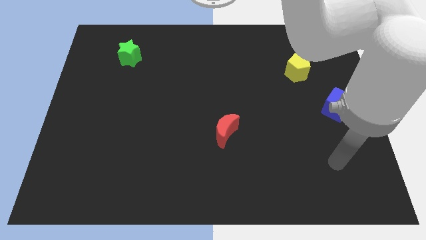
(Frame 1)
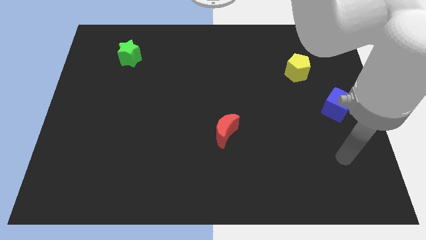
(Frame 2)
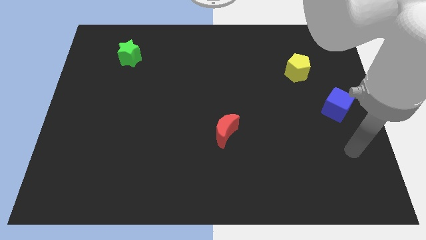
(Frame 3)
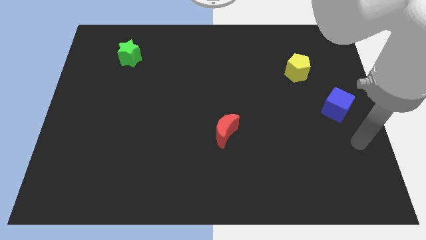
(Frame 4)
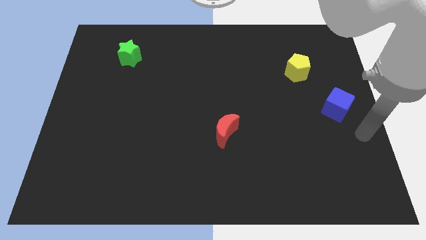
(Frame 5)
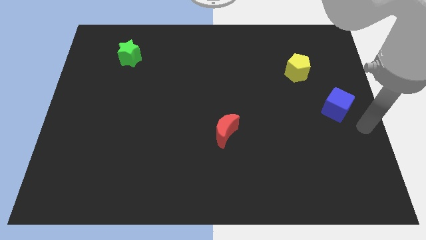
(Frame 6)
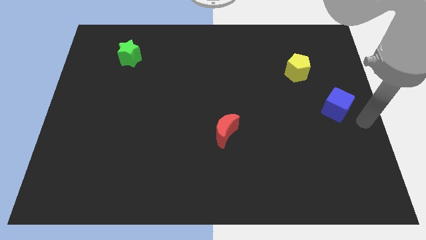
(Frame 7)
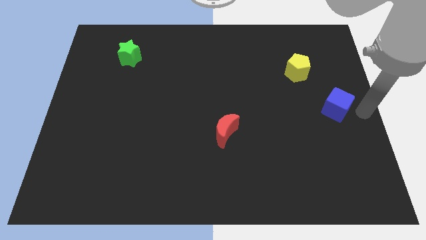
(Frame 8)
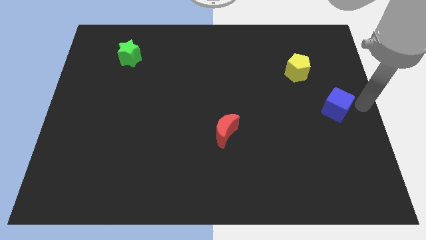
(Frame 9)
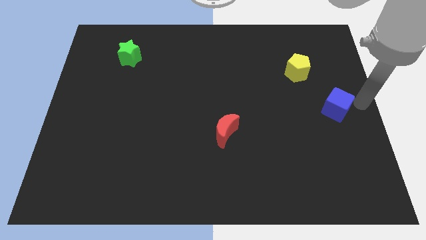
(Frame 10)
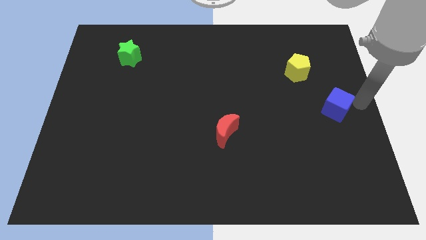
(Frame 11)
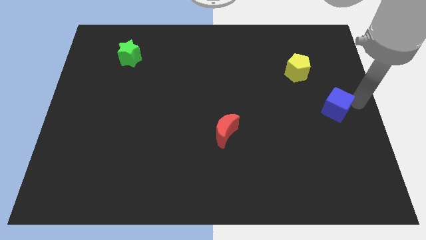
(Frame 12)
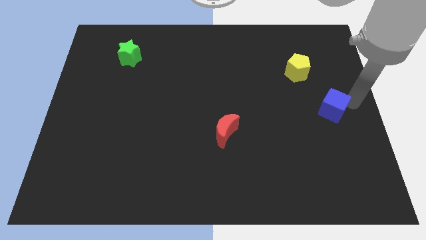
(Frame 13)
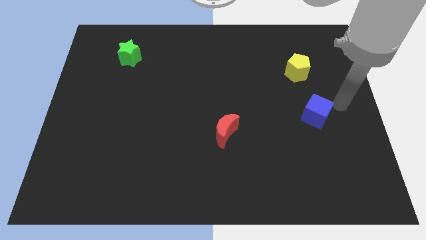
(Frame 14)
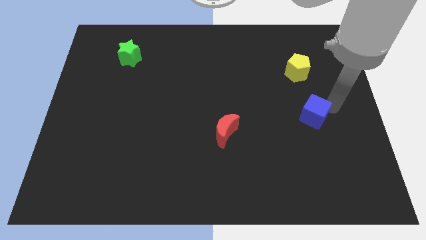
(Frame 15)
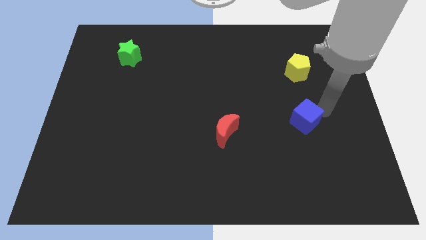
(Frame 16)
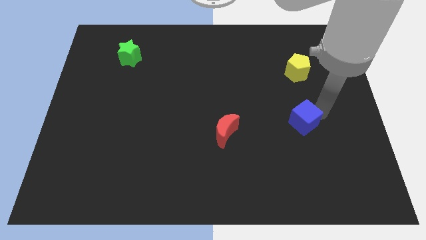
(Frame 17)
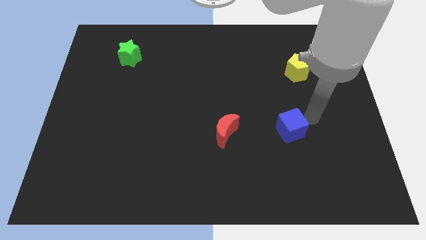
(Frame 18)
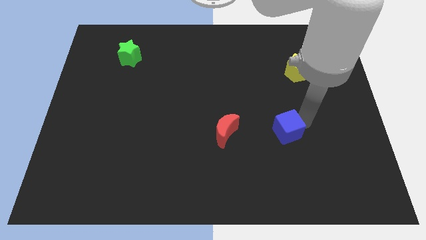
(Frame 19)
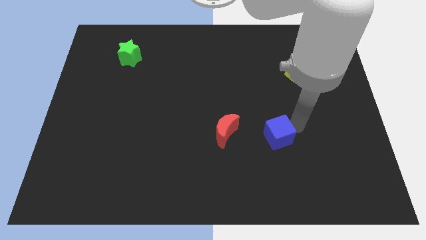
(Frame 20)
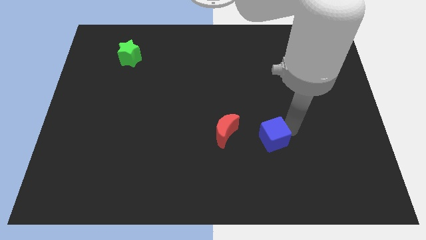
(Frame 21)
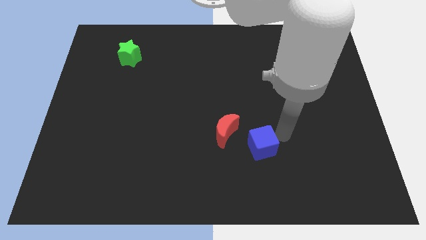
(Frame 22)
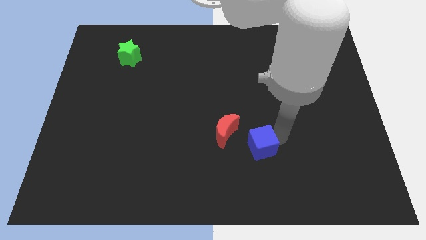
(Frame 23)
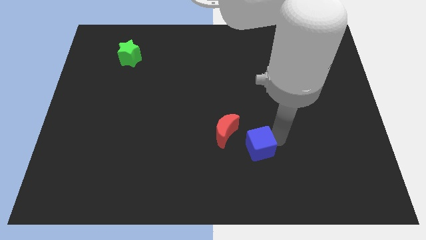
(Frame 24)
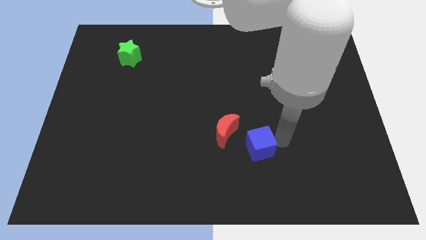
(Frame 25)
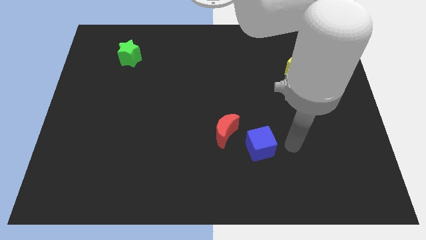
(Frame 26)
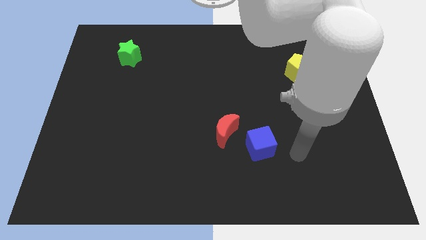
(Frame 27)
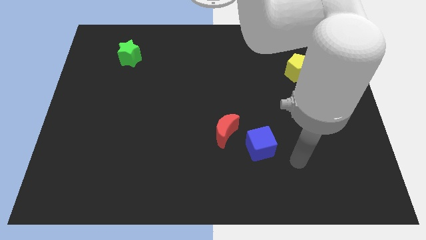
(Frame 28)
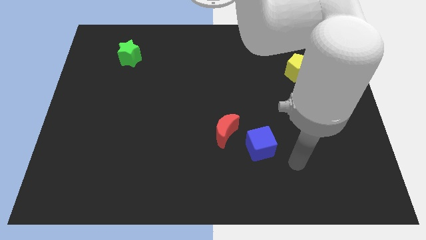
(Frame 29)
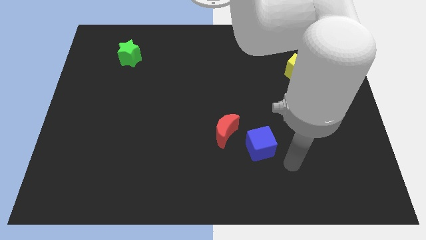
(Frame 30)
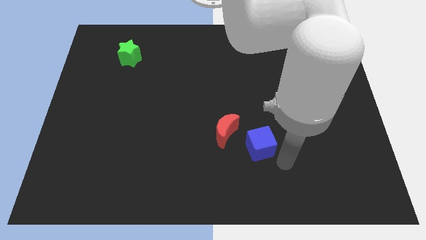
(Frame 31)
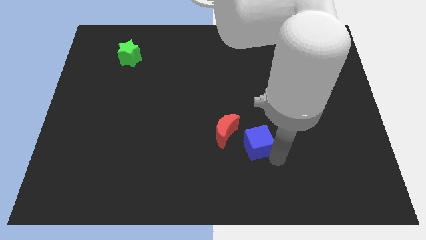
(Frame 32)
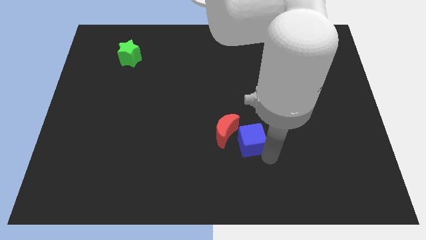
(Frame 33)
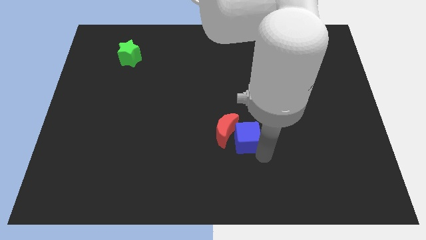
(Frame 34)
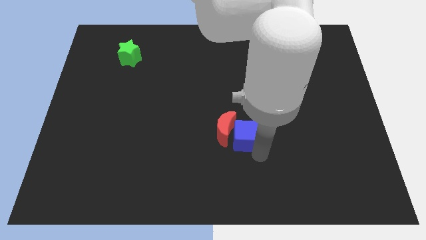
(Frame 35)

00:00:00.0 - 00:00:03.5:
slide the cube to the red moon

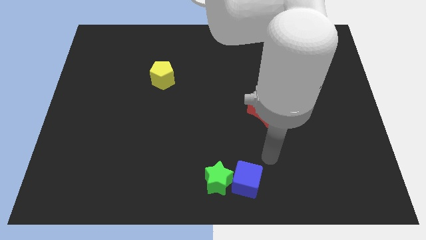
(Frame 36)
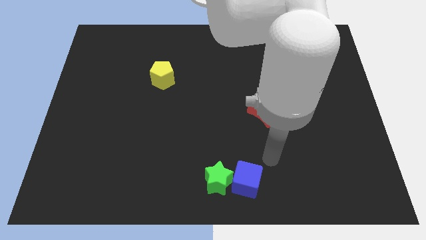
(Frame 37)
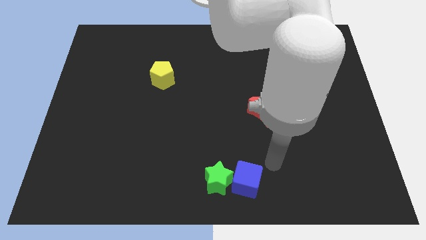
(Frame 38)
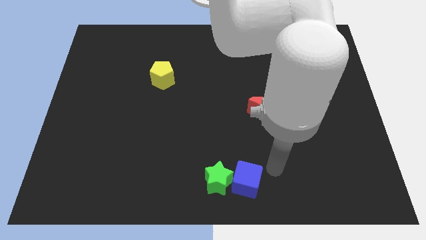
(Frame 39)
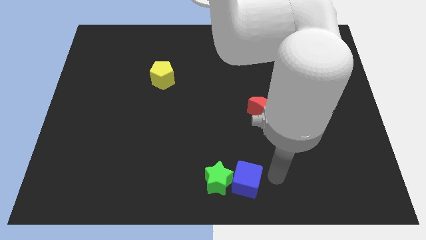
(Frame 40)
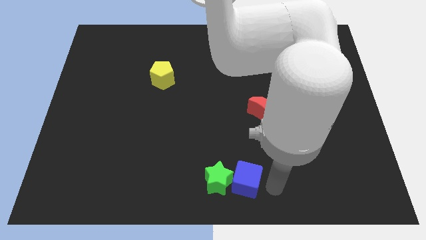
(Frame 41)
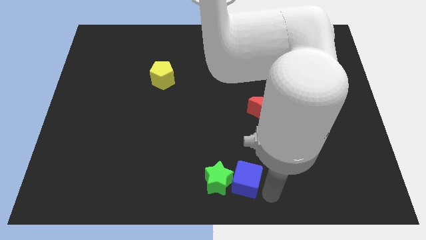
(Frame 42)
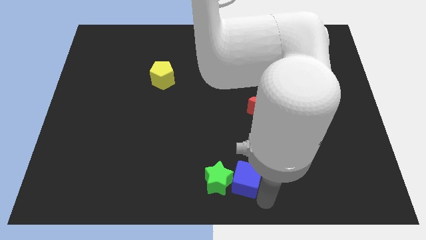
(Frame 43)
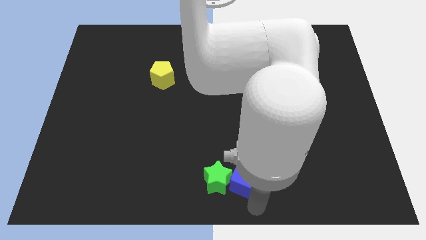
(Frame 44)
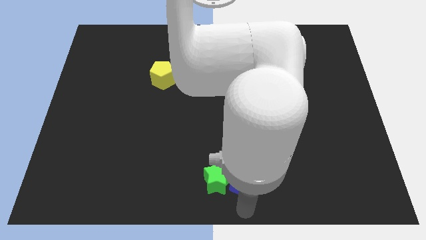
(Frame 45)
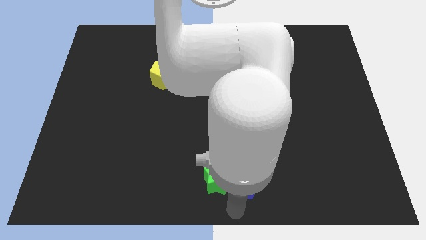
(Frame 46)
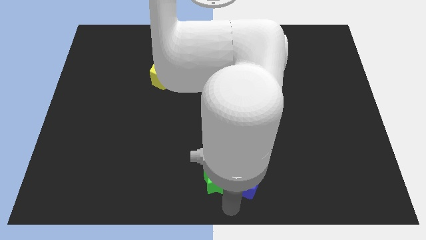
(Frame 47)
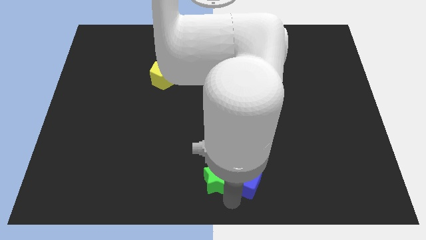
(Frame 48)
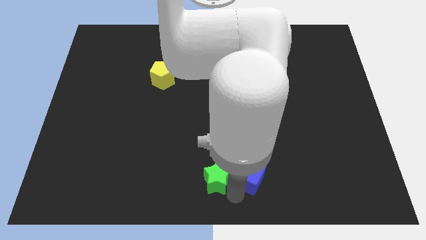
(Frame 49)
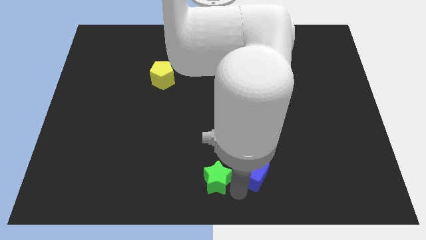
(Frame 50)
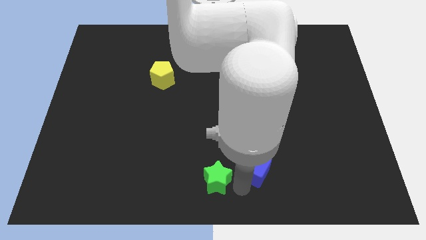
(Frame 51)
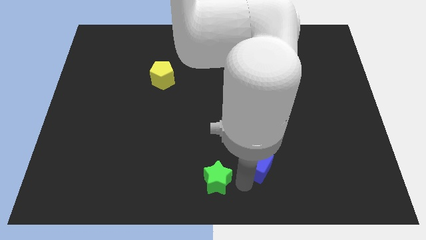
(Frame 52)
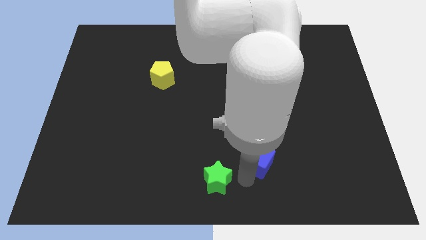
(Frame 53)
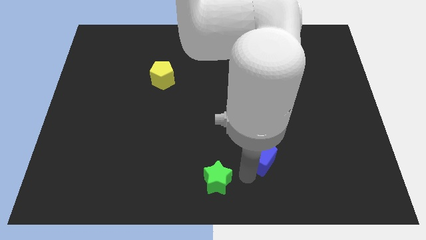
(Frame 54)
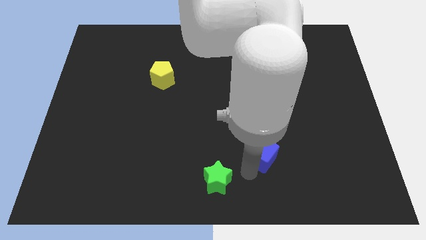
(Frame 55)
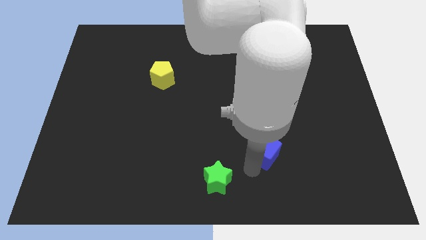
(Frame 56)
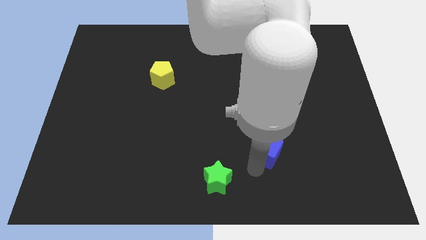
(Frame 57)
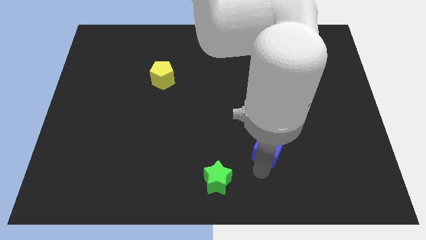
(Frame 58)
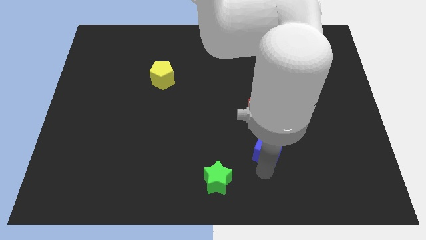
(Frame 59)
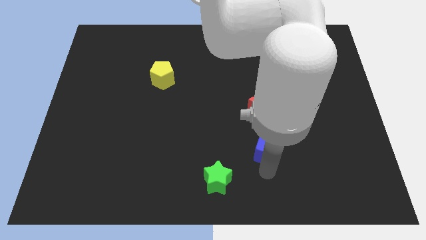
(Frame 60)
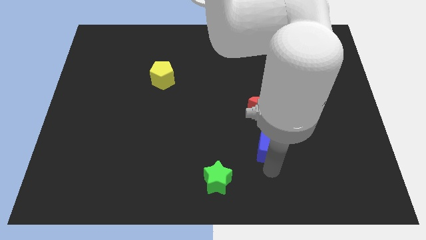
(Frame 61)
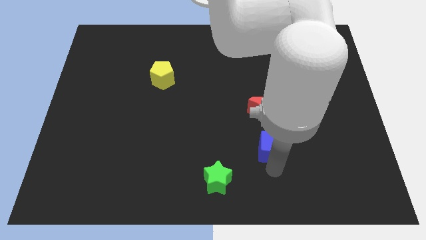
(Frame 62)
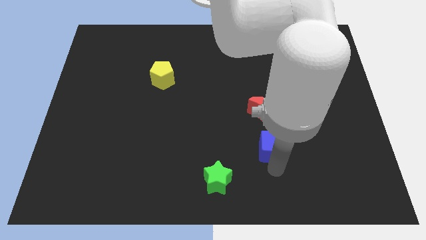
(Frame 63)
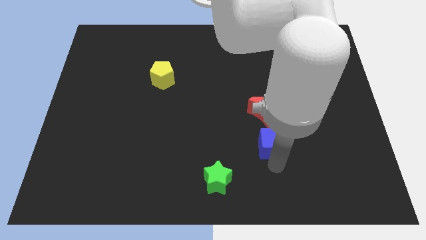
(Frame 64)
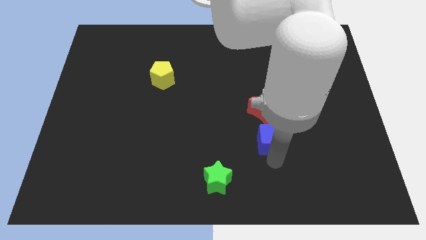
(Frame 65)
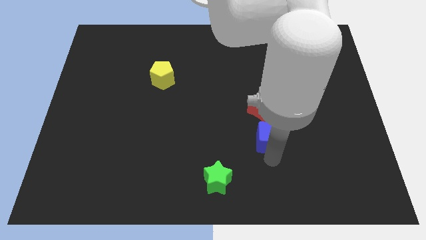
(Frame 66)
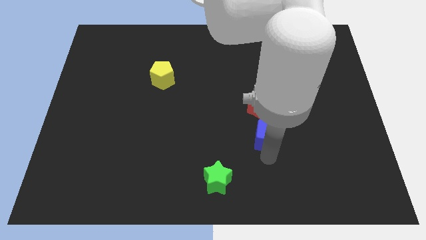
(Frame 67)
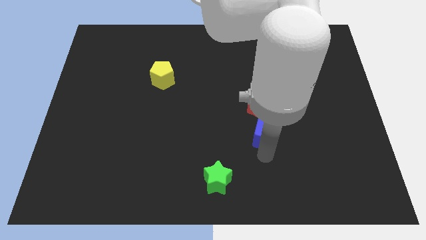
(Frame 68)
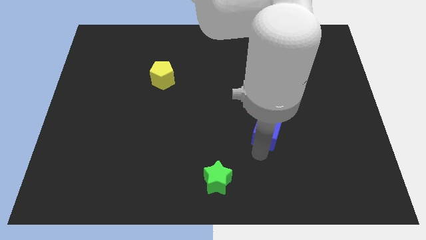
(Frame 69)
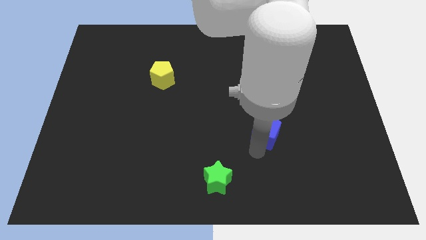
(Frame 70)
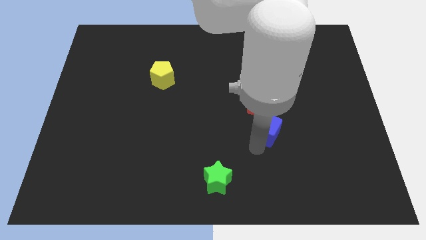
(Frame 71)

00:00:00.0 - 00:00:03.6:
put the blue block towards the red block

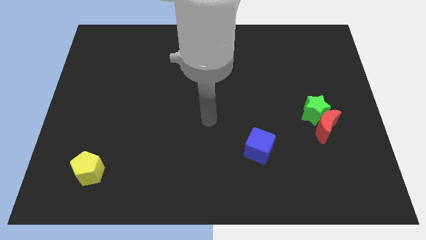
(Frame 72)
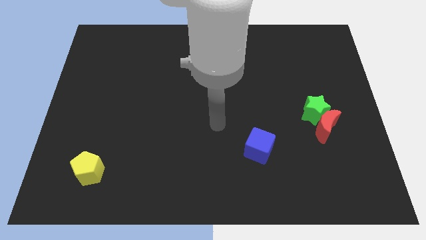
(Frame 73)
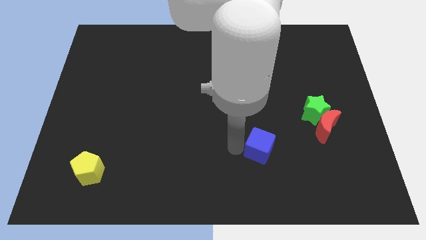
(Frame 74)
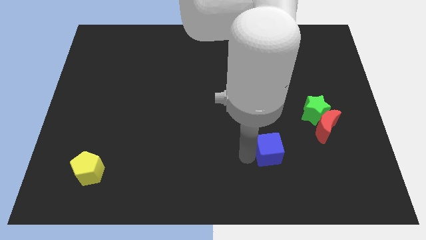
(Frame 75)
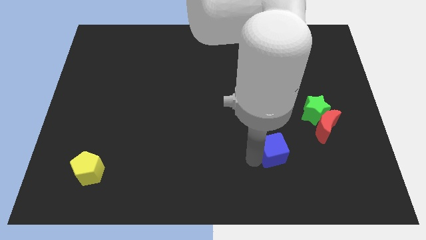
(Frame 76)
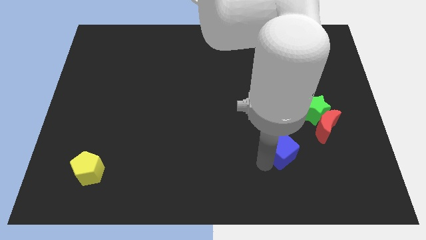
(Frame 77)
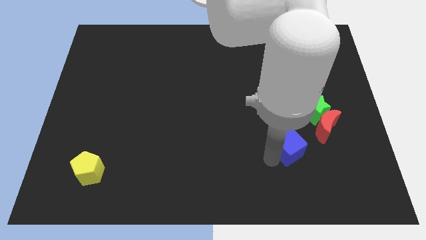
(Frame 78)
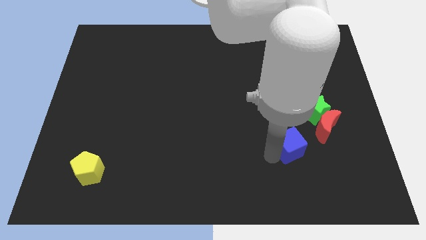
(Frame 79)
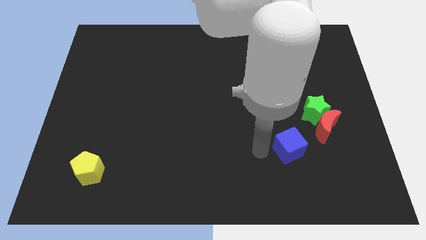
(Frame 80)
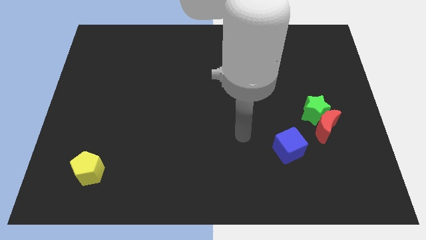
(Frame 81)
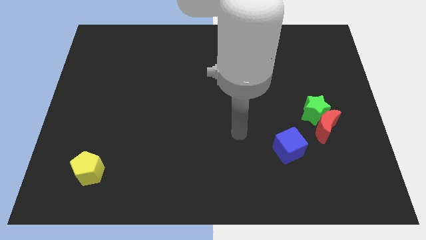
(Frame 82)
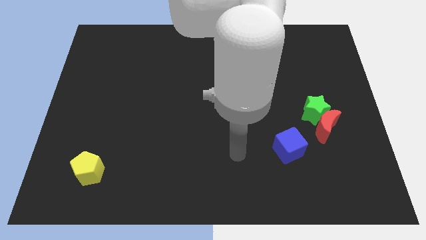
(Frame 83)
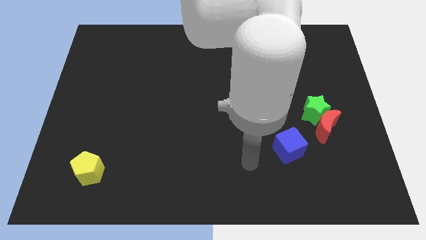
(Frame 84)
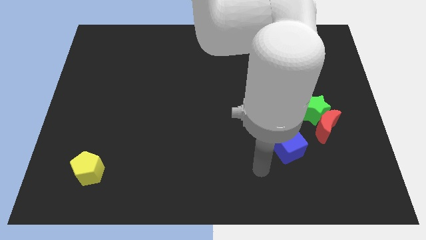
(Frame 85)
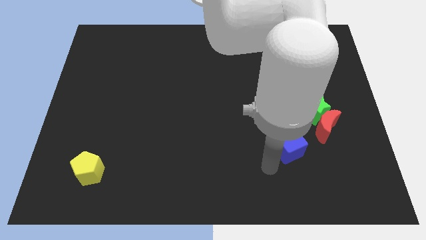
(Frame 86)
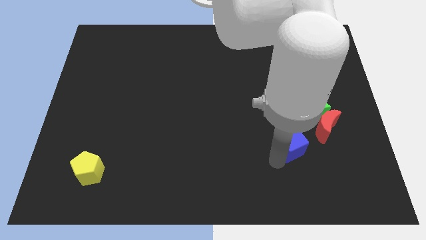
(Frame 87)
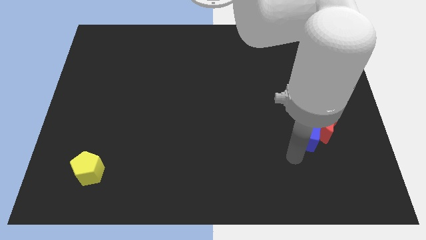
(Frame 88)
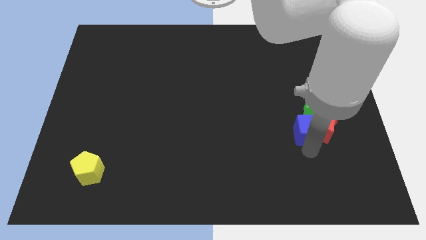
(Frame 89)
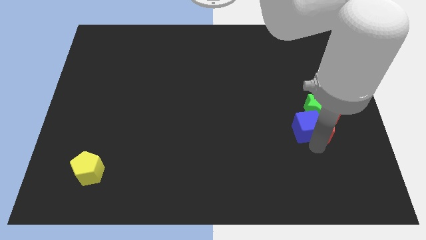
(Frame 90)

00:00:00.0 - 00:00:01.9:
push the cube towards the red moon
